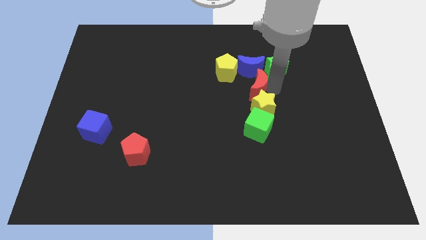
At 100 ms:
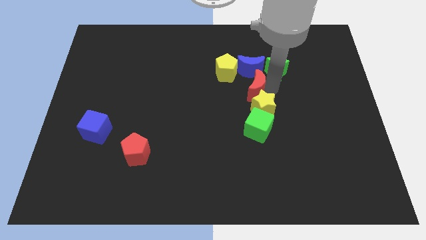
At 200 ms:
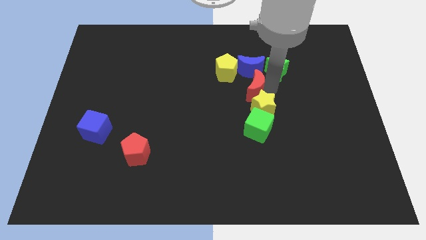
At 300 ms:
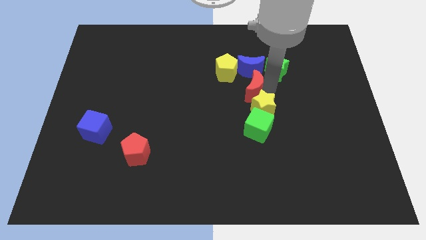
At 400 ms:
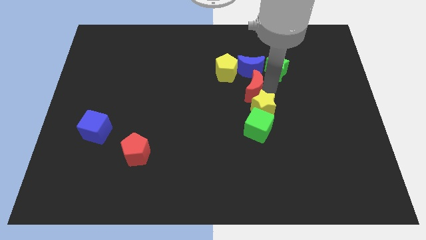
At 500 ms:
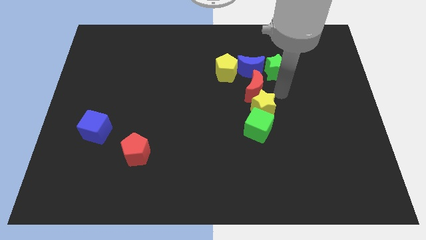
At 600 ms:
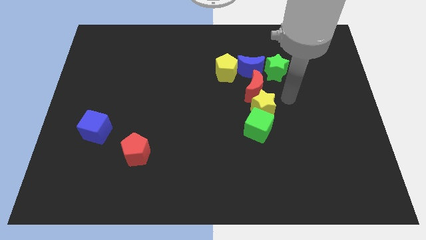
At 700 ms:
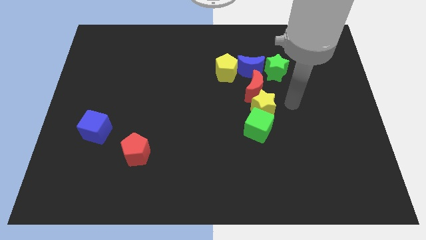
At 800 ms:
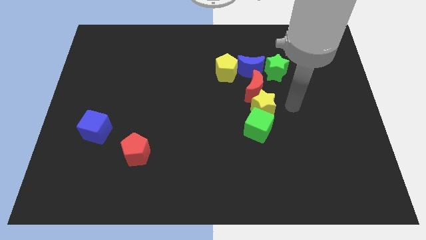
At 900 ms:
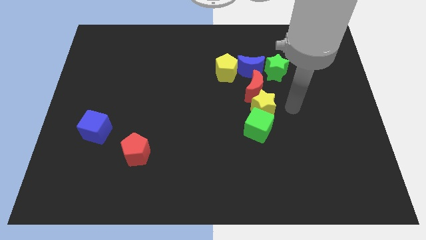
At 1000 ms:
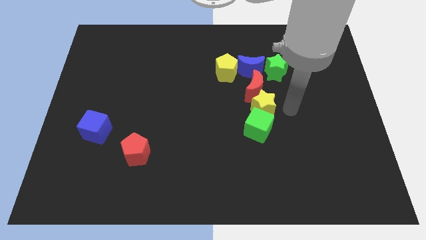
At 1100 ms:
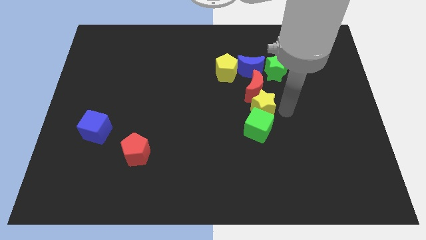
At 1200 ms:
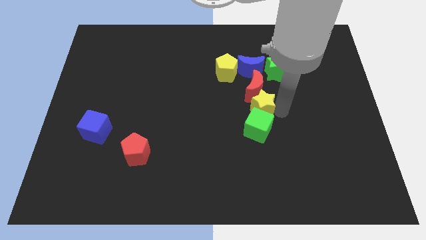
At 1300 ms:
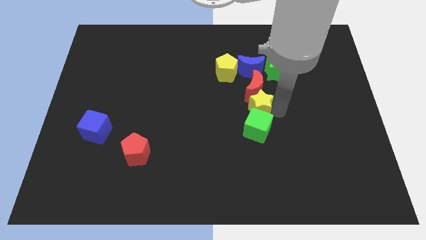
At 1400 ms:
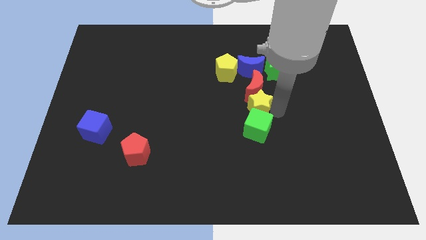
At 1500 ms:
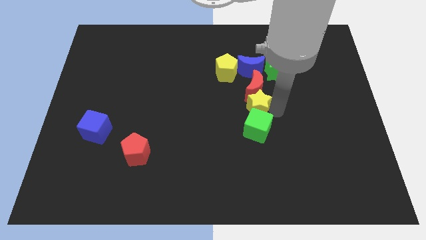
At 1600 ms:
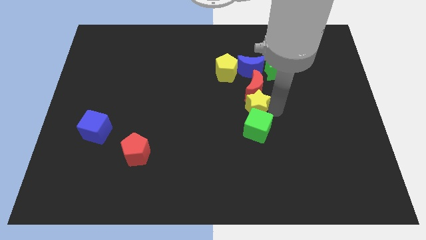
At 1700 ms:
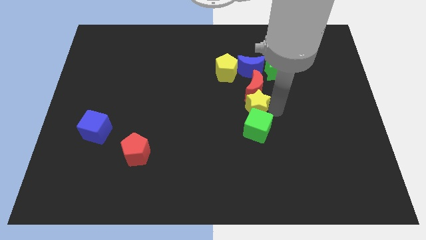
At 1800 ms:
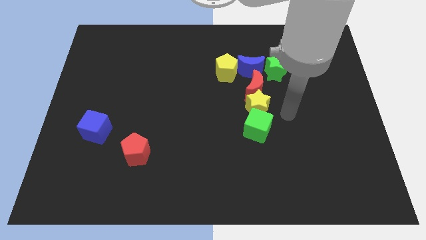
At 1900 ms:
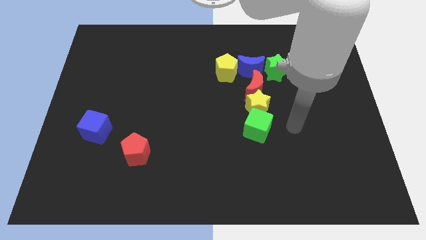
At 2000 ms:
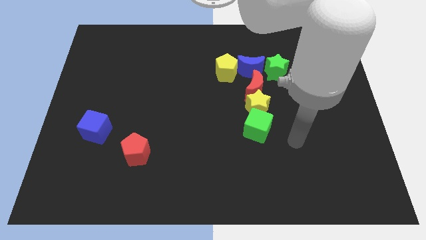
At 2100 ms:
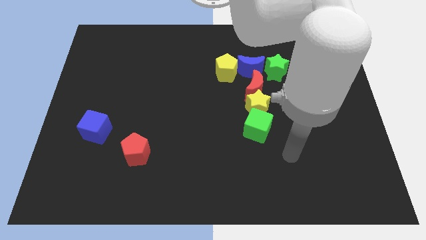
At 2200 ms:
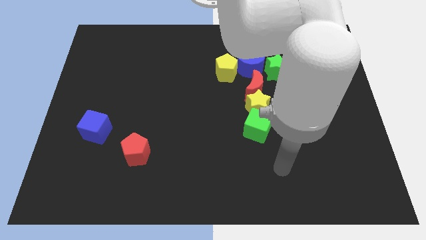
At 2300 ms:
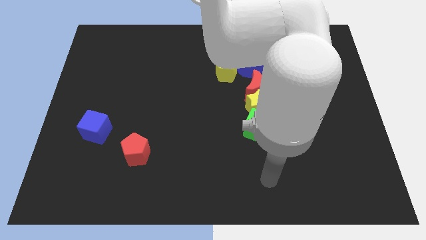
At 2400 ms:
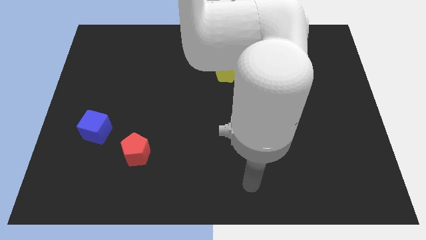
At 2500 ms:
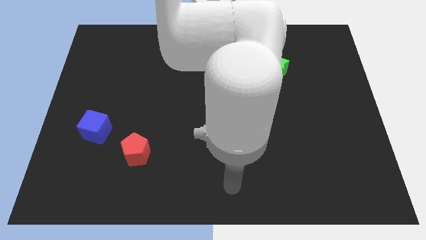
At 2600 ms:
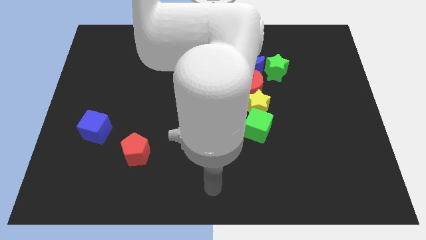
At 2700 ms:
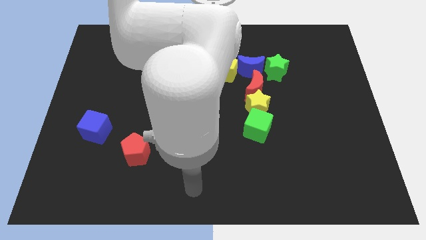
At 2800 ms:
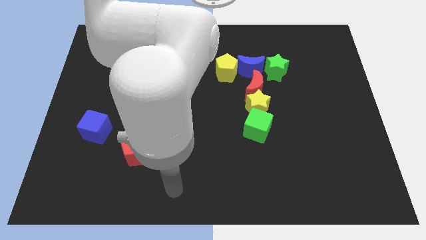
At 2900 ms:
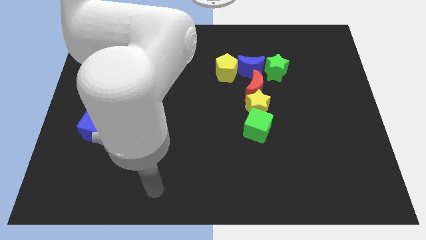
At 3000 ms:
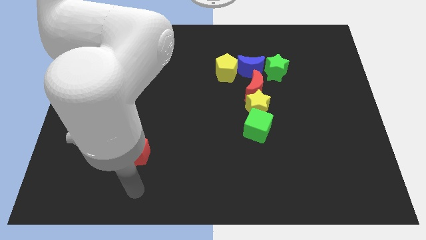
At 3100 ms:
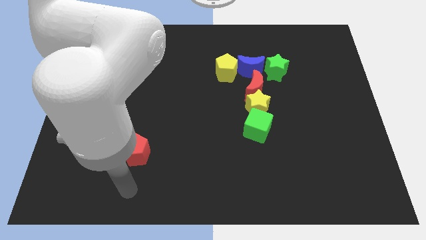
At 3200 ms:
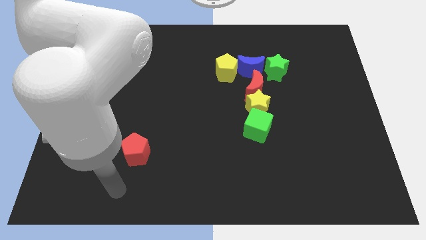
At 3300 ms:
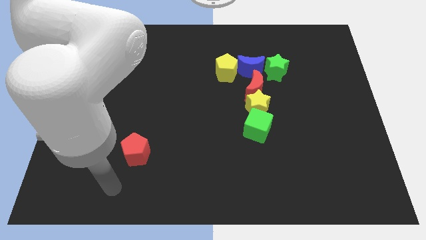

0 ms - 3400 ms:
move the red and yellow blocks towards the left side

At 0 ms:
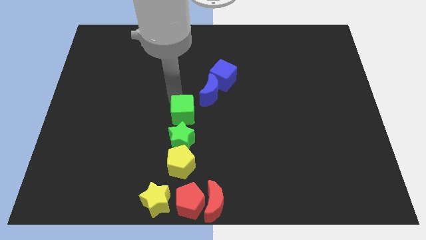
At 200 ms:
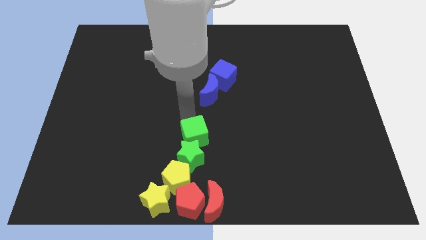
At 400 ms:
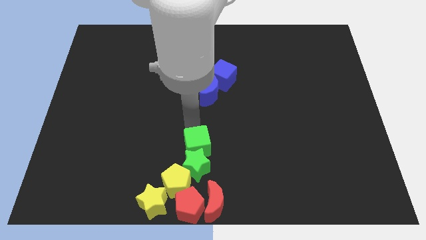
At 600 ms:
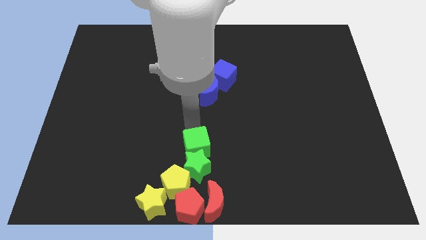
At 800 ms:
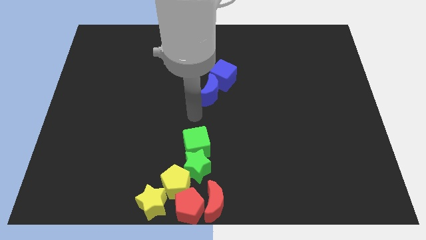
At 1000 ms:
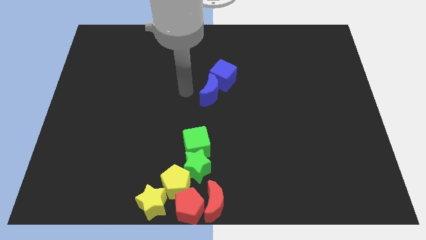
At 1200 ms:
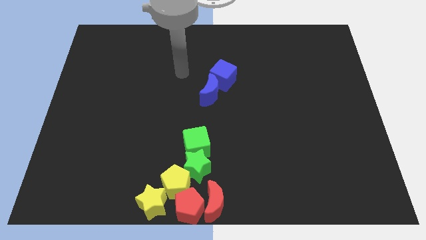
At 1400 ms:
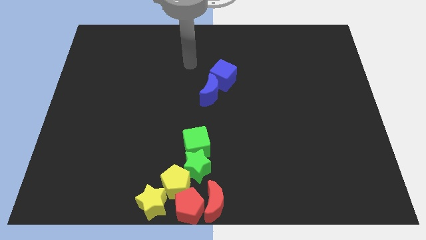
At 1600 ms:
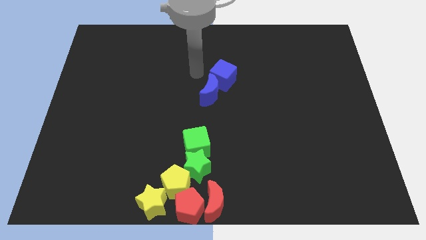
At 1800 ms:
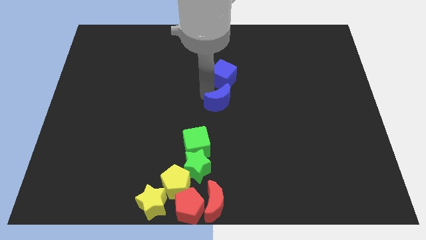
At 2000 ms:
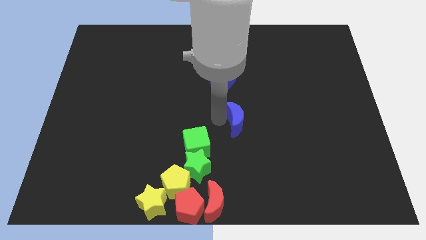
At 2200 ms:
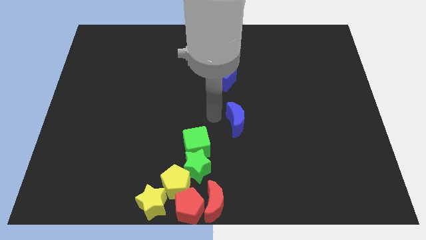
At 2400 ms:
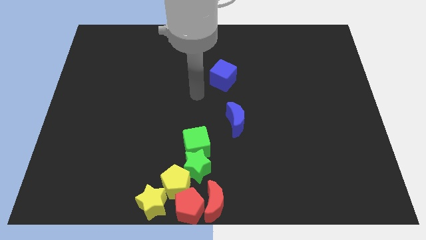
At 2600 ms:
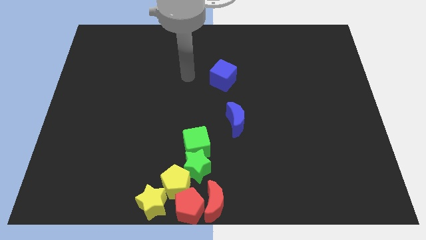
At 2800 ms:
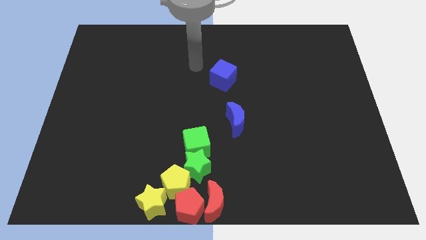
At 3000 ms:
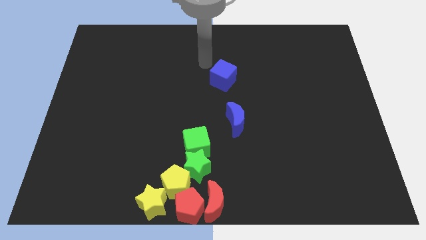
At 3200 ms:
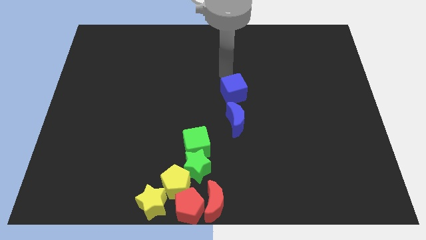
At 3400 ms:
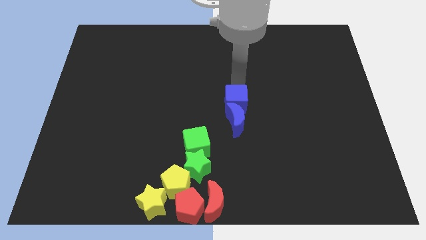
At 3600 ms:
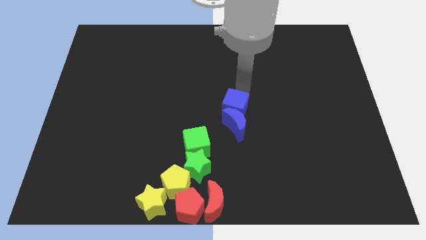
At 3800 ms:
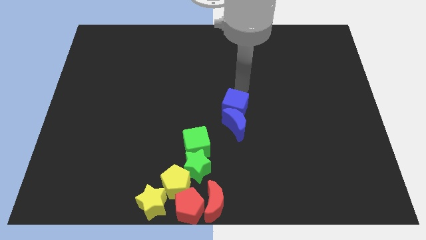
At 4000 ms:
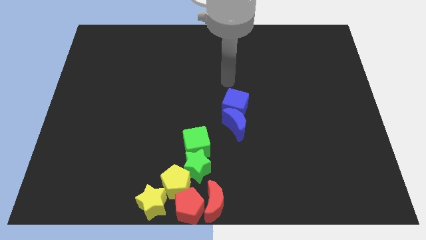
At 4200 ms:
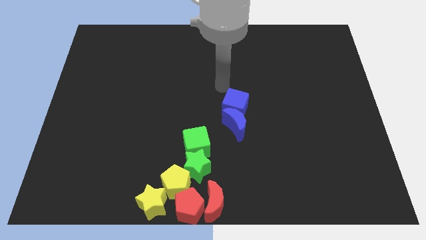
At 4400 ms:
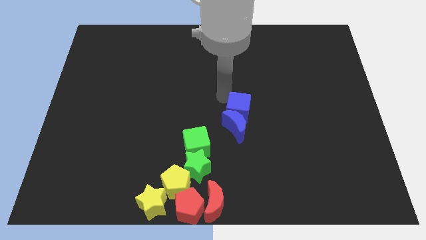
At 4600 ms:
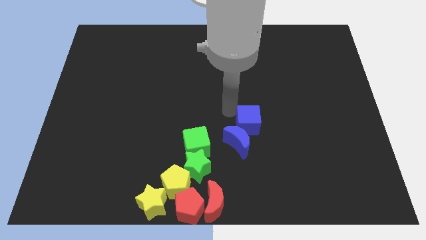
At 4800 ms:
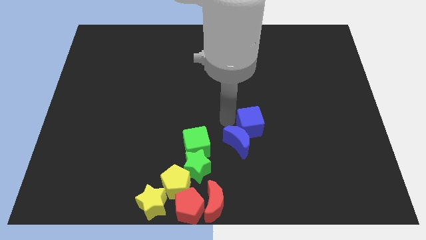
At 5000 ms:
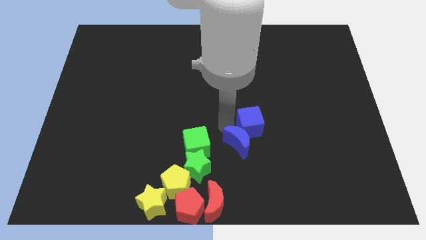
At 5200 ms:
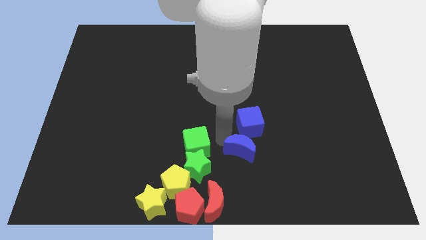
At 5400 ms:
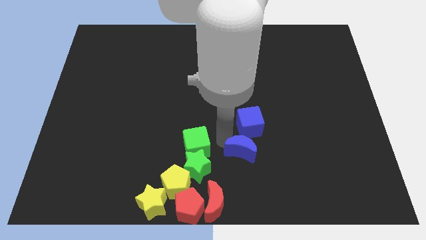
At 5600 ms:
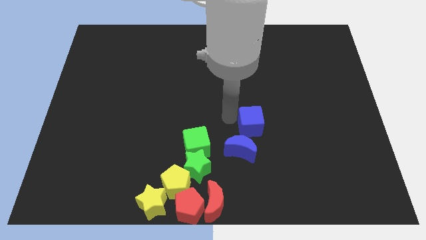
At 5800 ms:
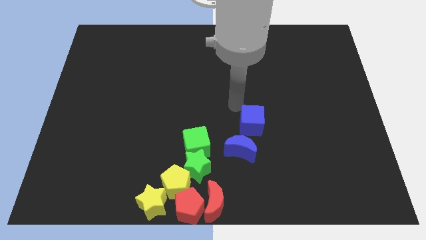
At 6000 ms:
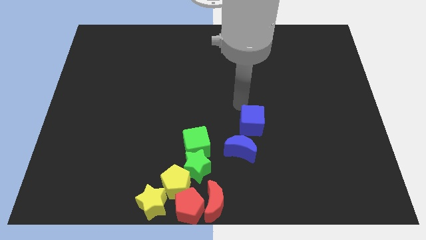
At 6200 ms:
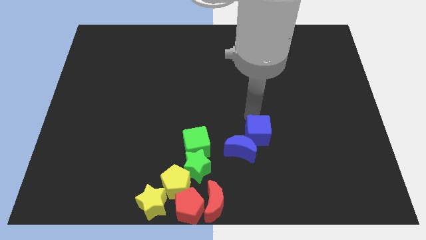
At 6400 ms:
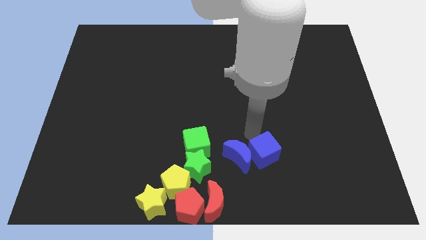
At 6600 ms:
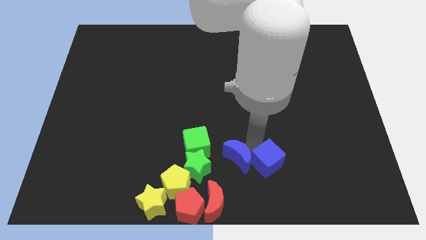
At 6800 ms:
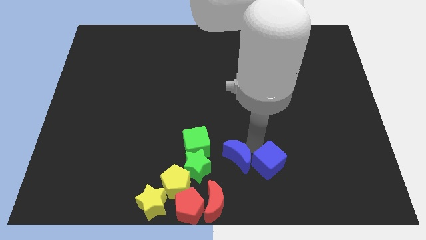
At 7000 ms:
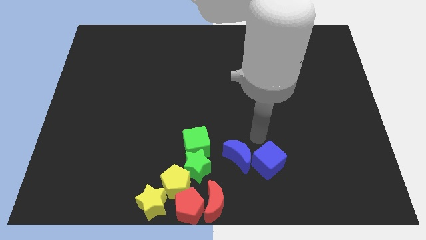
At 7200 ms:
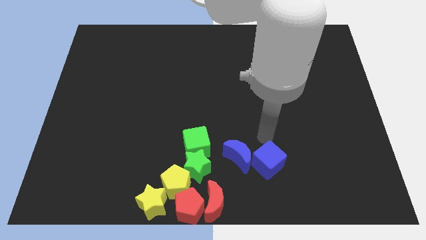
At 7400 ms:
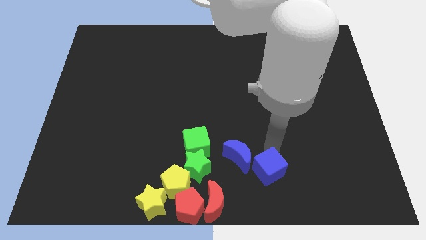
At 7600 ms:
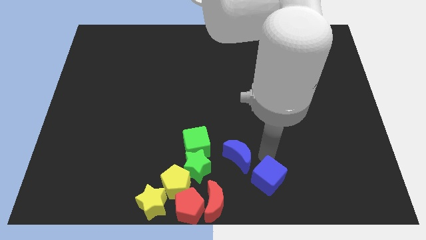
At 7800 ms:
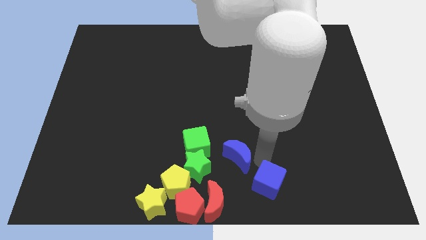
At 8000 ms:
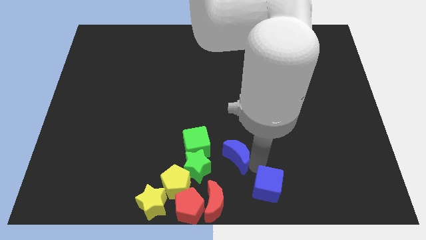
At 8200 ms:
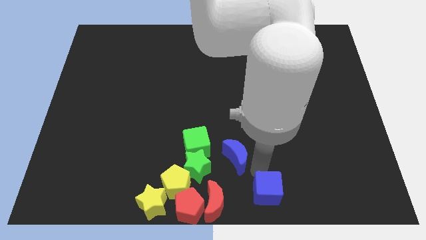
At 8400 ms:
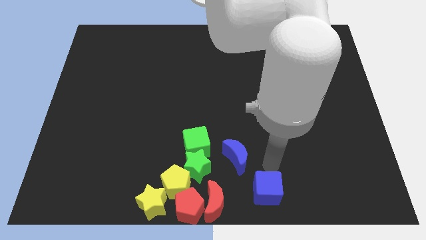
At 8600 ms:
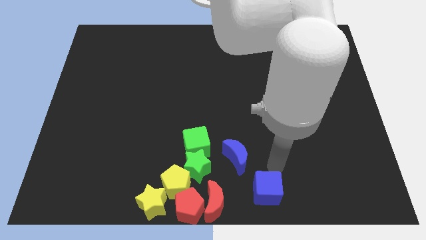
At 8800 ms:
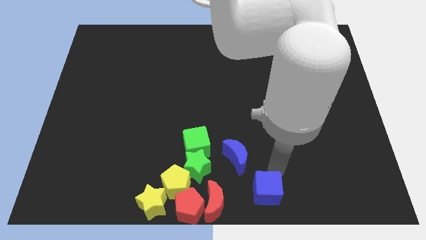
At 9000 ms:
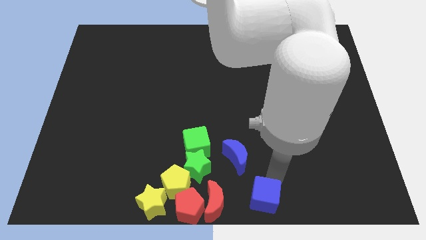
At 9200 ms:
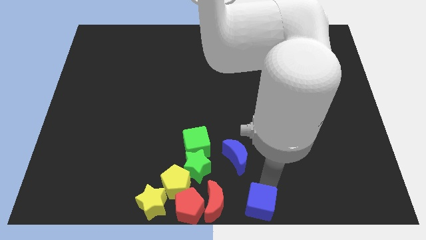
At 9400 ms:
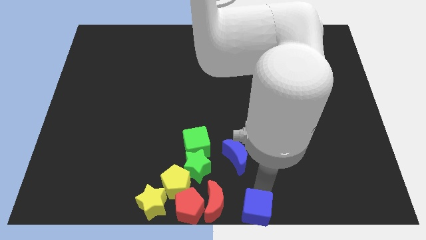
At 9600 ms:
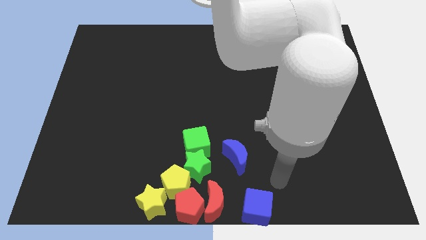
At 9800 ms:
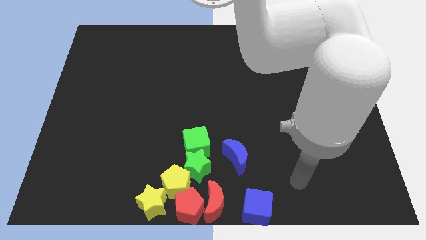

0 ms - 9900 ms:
move the blue cube to the bottom

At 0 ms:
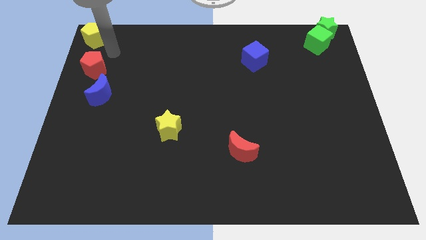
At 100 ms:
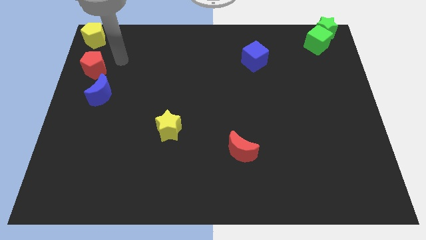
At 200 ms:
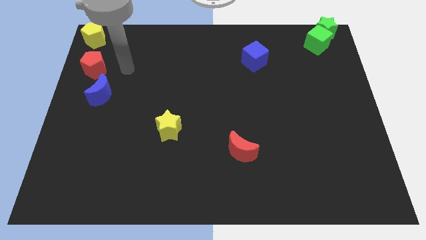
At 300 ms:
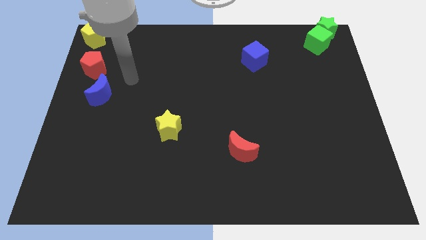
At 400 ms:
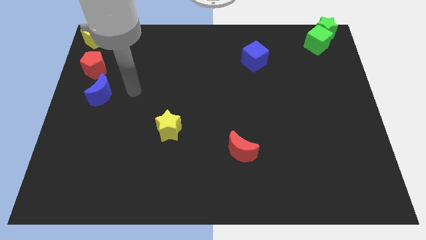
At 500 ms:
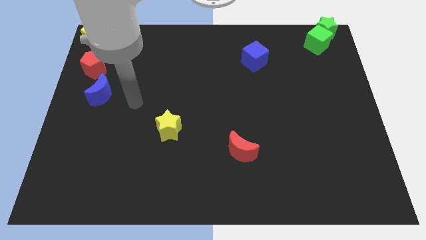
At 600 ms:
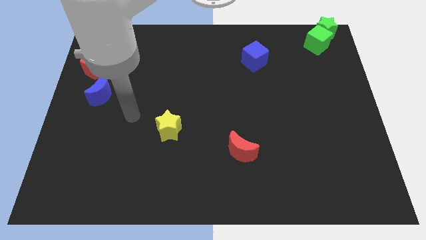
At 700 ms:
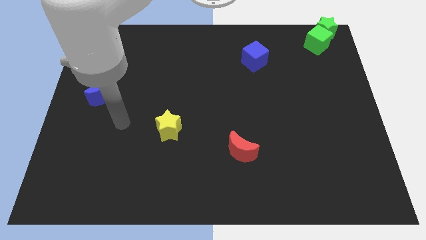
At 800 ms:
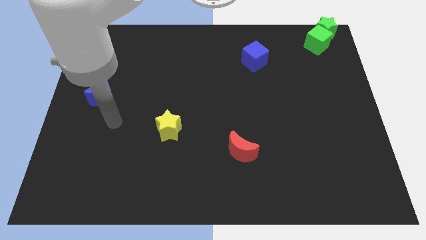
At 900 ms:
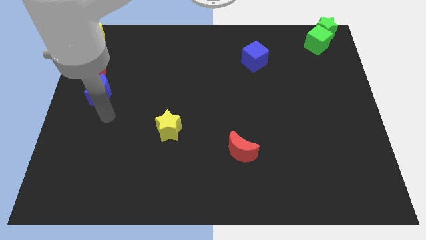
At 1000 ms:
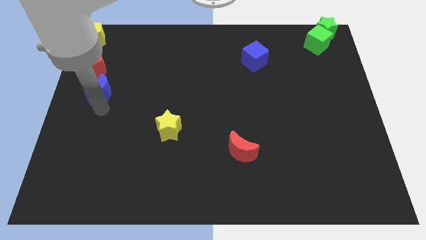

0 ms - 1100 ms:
place your arm at the bottom of the blue crescent
